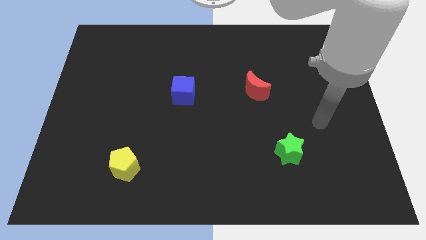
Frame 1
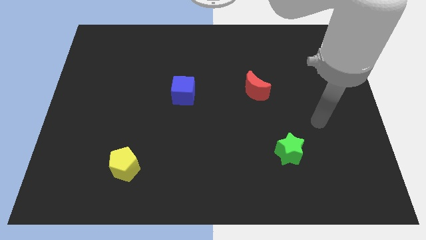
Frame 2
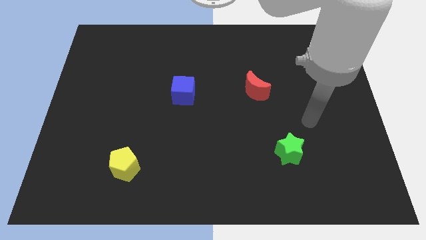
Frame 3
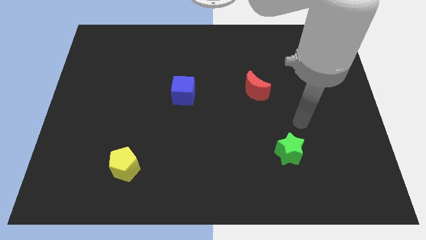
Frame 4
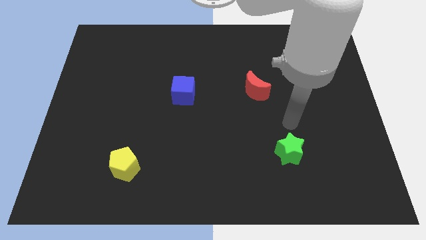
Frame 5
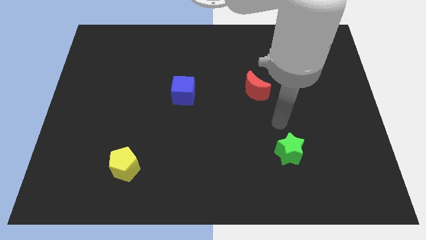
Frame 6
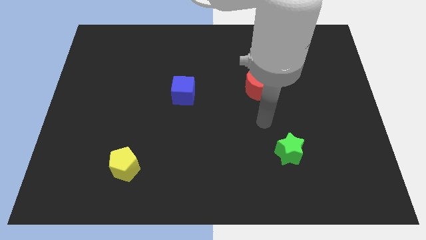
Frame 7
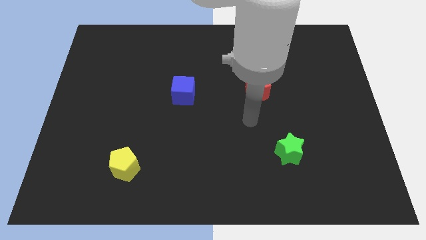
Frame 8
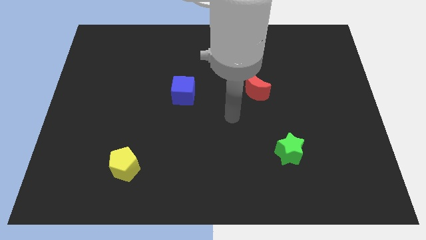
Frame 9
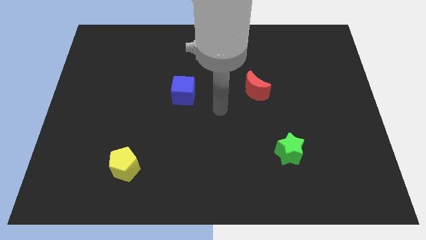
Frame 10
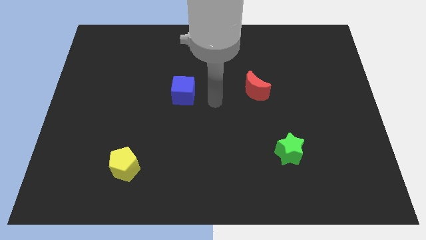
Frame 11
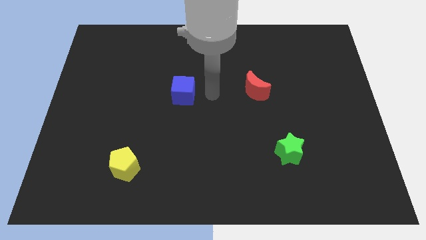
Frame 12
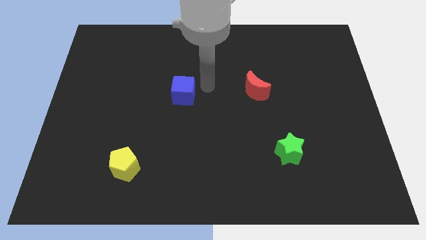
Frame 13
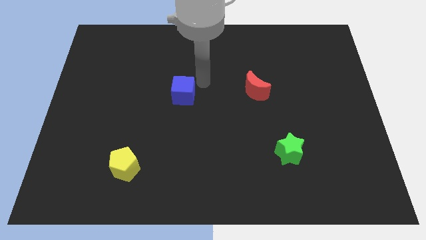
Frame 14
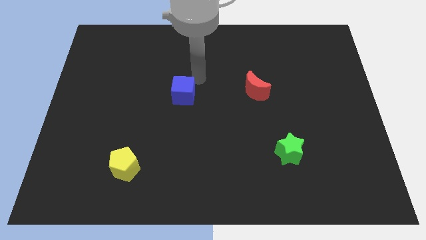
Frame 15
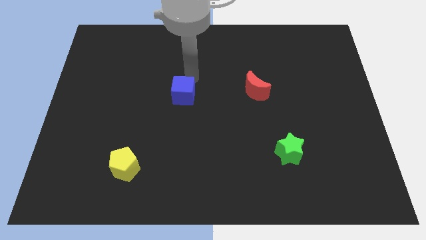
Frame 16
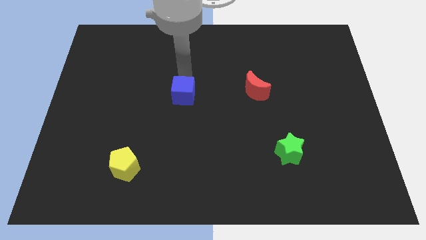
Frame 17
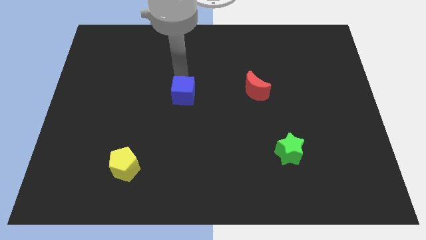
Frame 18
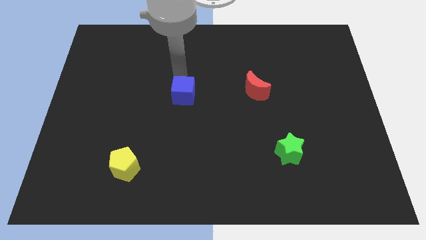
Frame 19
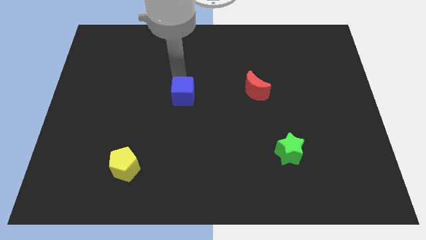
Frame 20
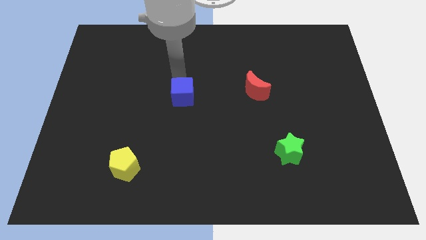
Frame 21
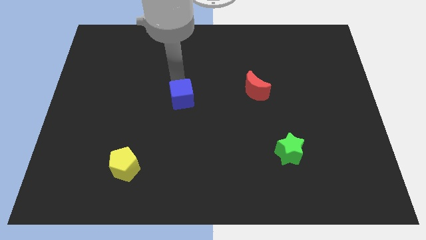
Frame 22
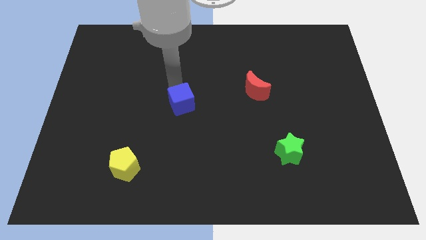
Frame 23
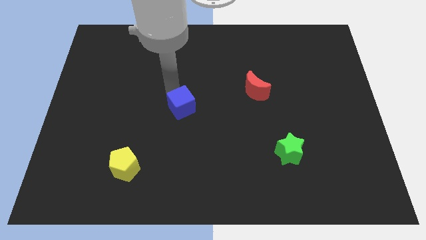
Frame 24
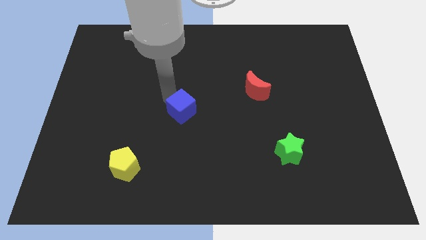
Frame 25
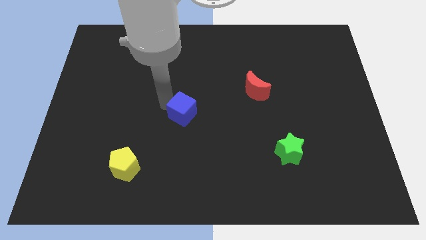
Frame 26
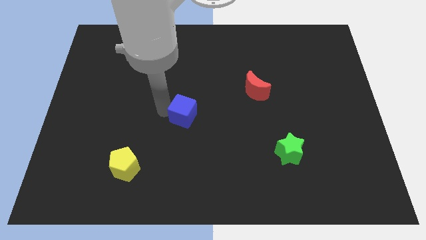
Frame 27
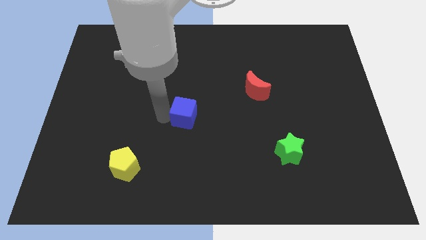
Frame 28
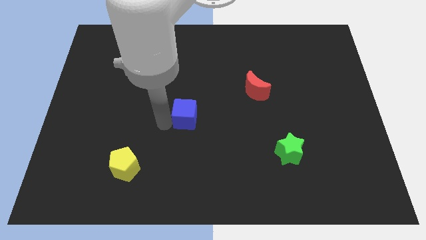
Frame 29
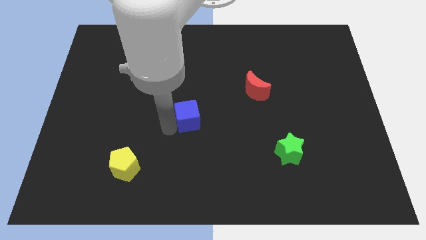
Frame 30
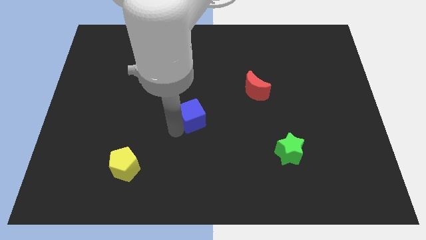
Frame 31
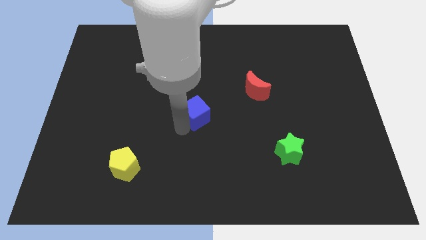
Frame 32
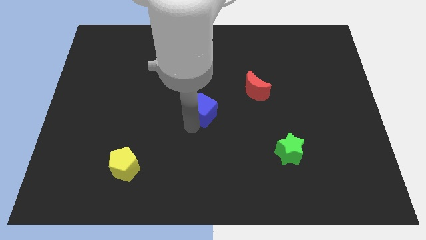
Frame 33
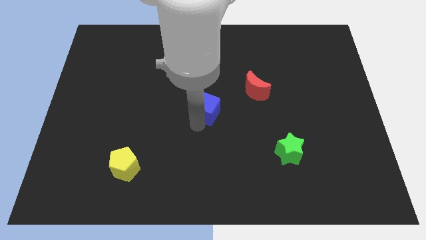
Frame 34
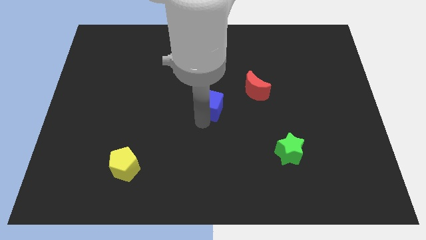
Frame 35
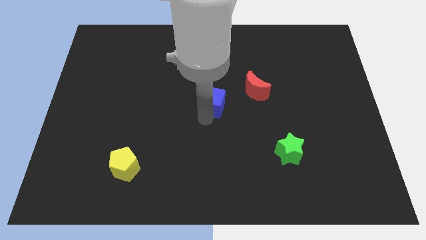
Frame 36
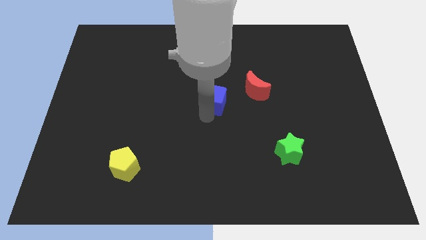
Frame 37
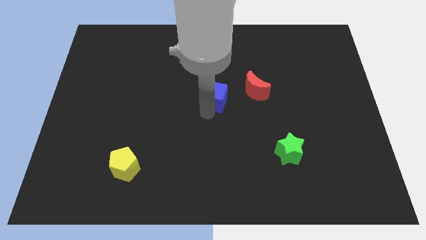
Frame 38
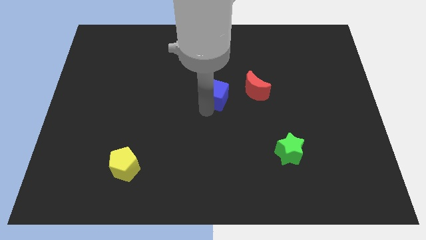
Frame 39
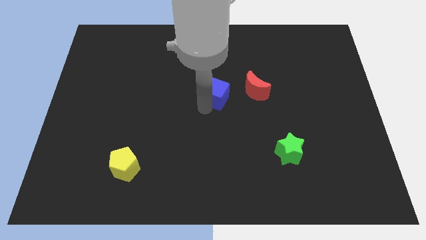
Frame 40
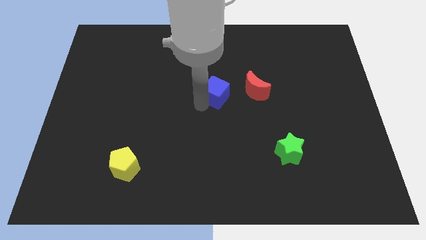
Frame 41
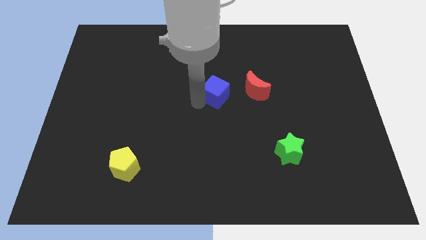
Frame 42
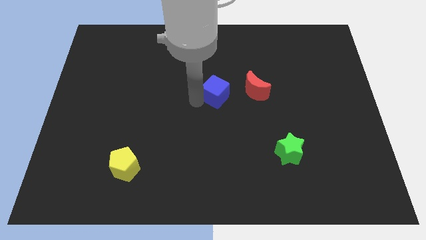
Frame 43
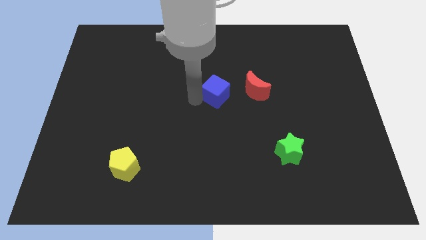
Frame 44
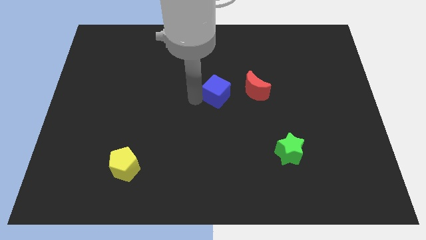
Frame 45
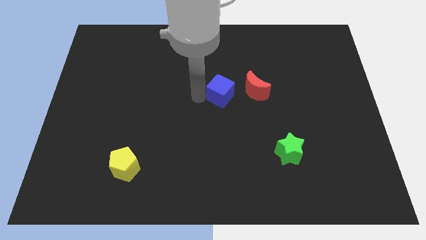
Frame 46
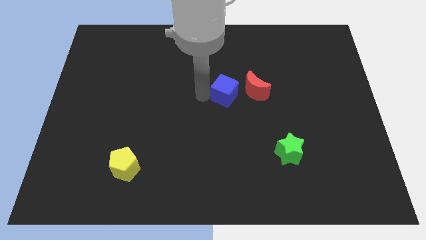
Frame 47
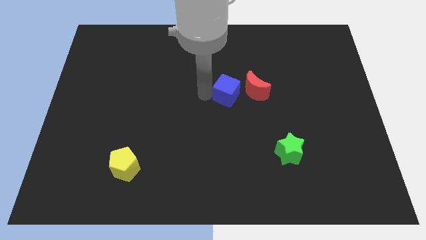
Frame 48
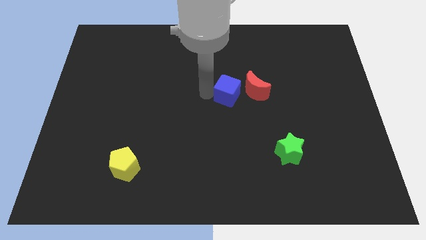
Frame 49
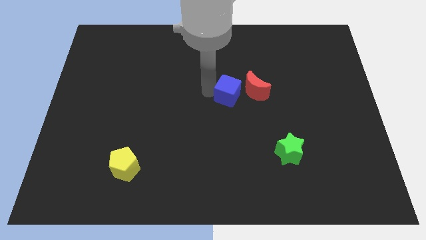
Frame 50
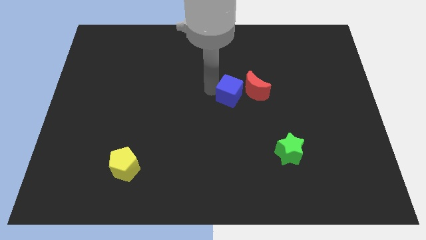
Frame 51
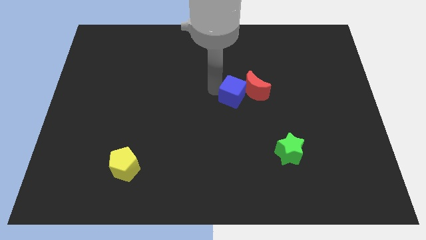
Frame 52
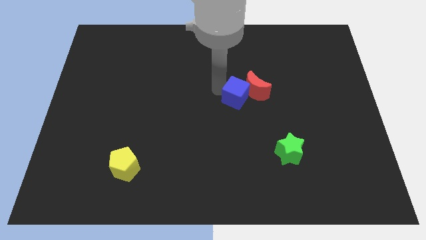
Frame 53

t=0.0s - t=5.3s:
slide the blue cube to the moon

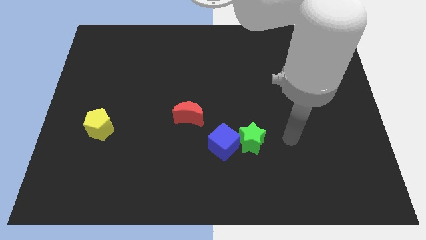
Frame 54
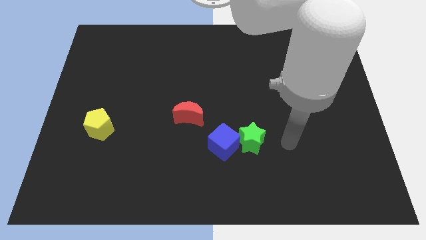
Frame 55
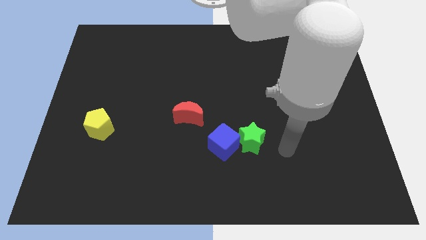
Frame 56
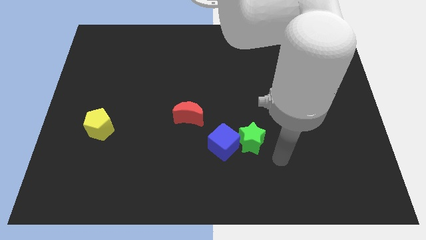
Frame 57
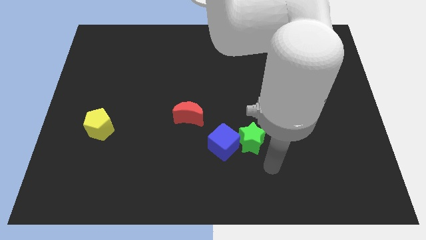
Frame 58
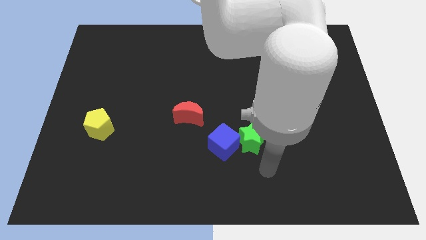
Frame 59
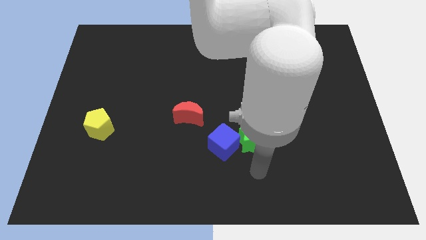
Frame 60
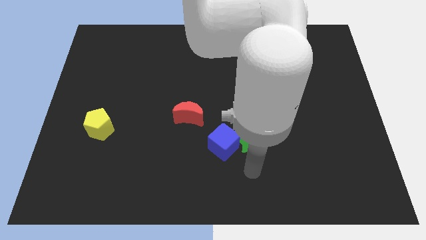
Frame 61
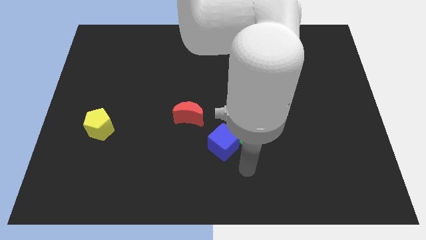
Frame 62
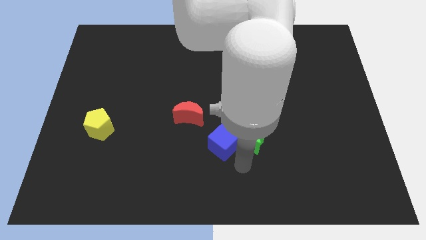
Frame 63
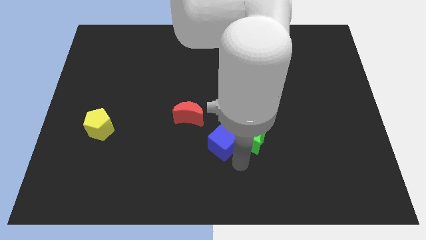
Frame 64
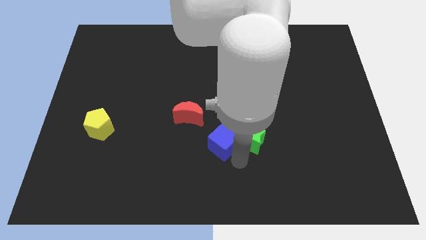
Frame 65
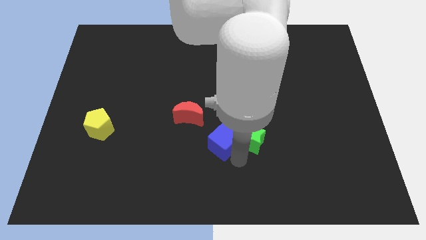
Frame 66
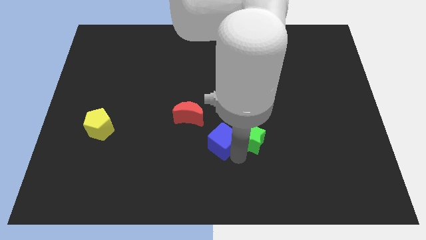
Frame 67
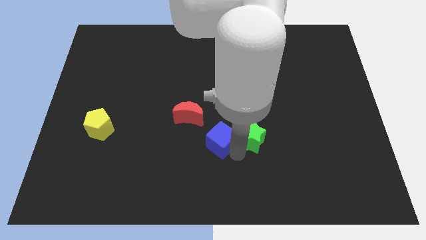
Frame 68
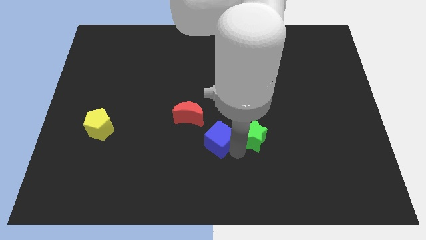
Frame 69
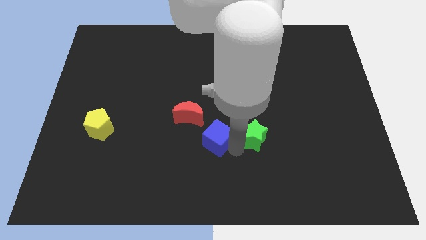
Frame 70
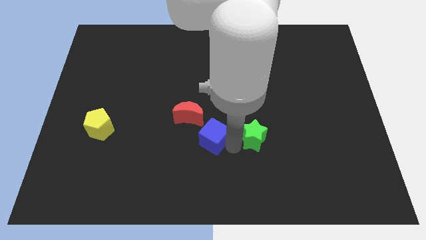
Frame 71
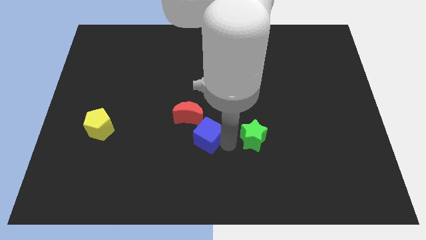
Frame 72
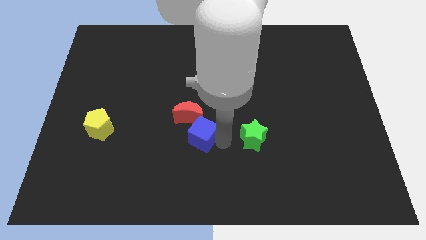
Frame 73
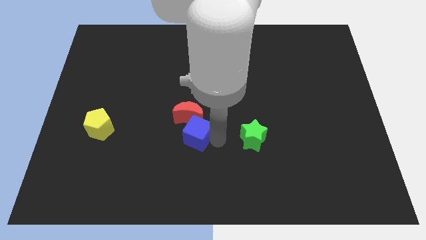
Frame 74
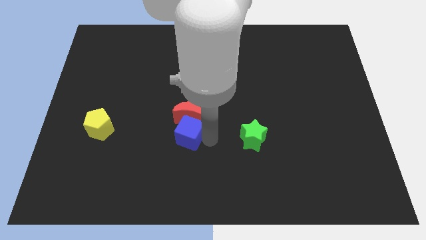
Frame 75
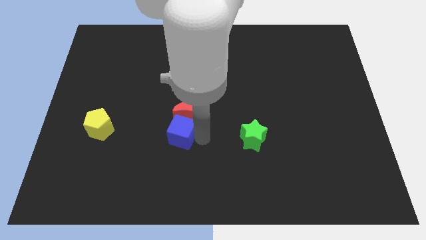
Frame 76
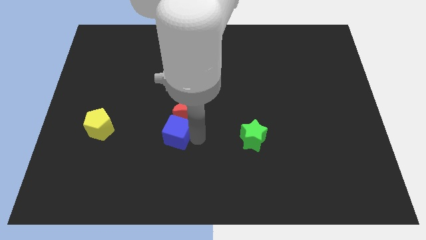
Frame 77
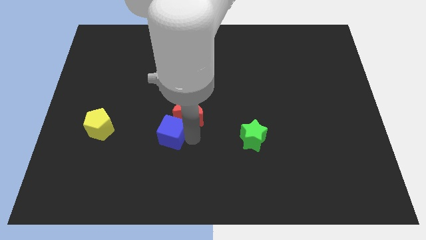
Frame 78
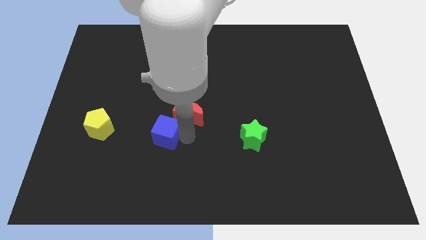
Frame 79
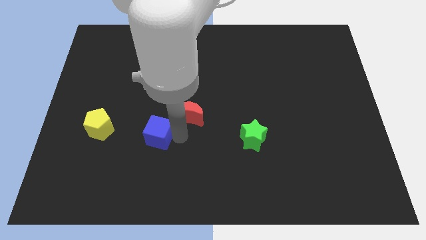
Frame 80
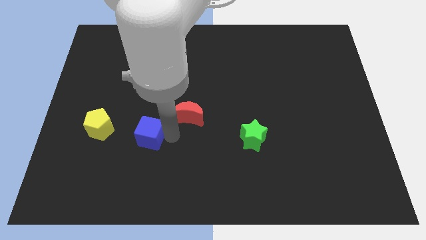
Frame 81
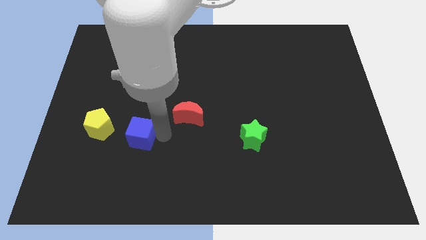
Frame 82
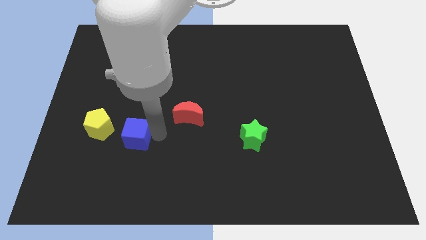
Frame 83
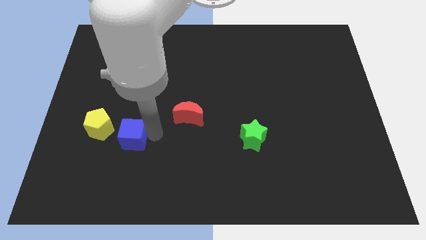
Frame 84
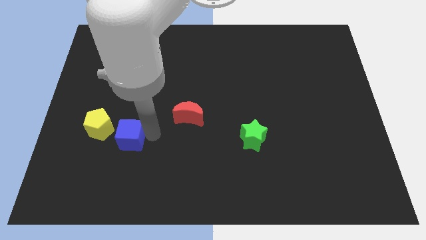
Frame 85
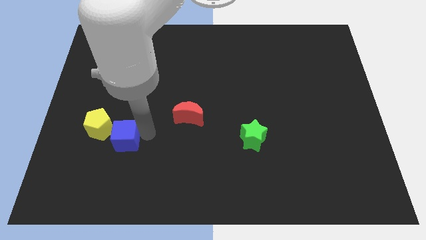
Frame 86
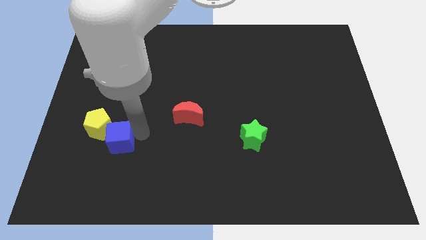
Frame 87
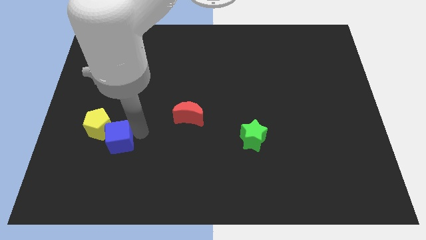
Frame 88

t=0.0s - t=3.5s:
push the blue cube towards the pentagon
